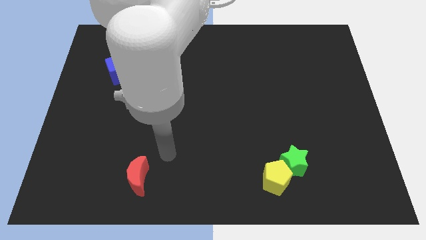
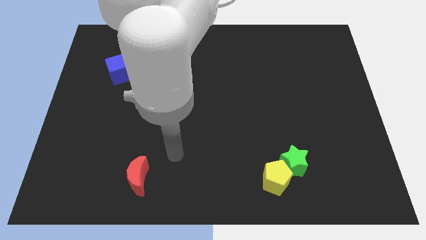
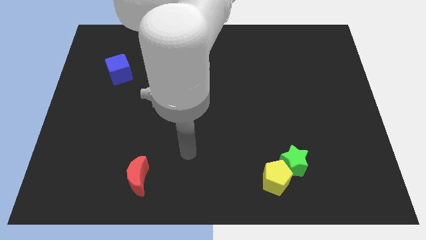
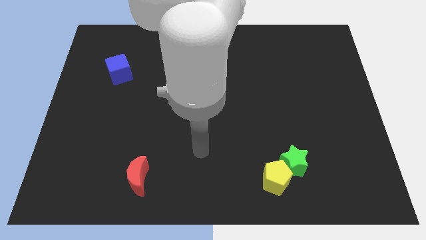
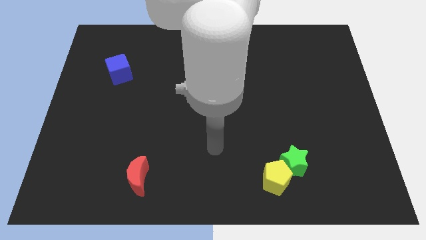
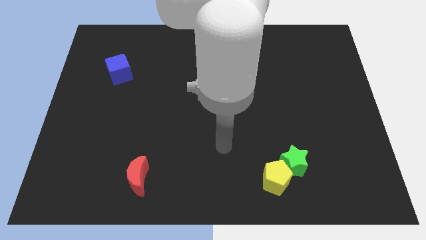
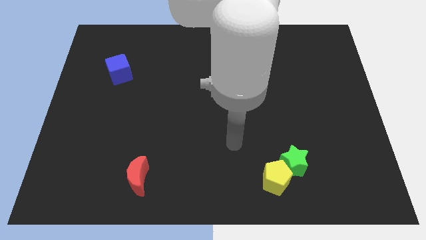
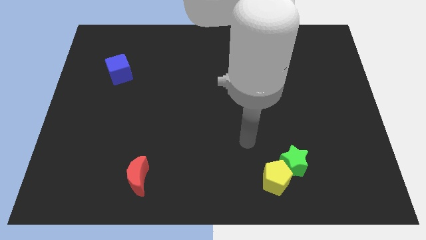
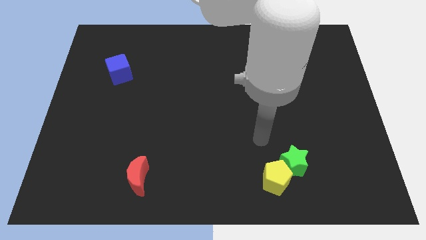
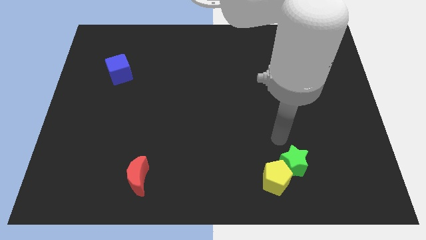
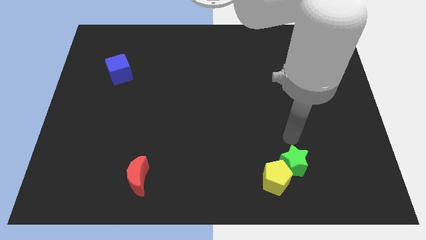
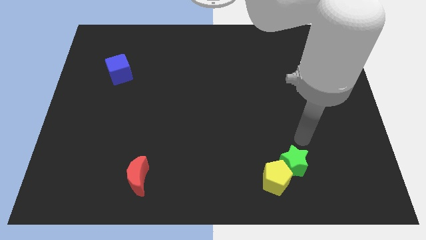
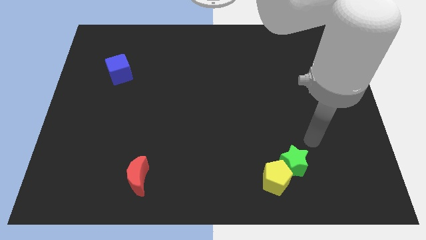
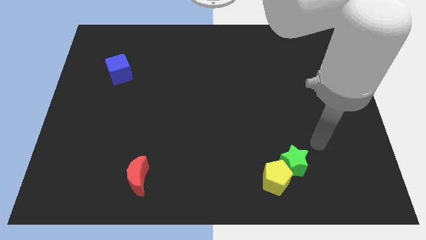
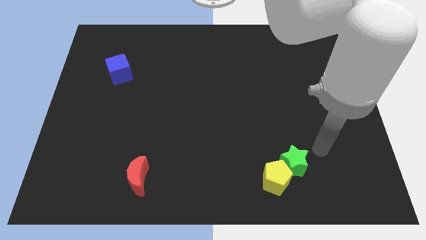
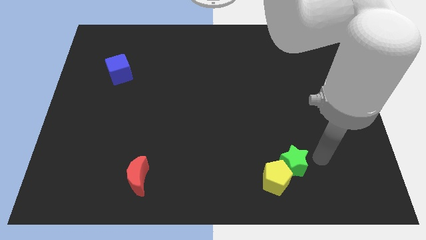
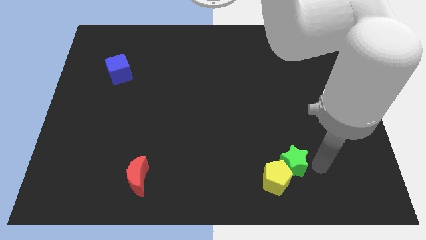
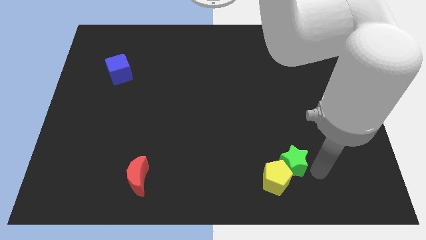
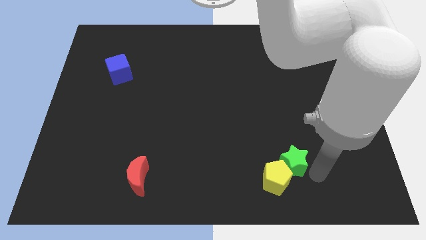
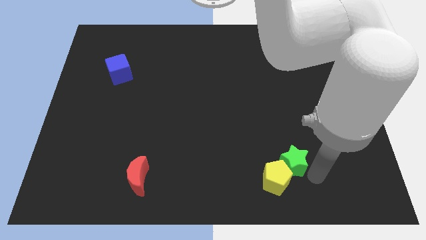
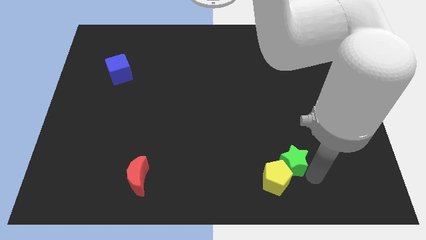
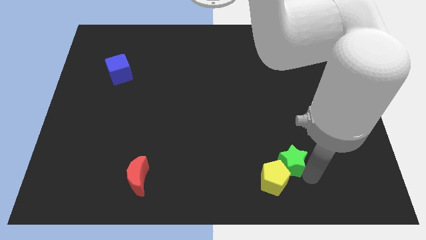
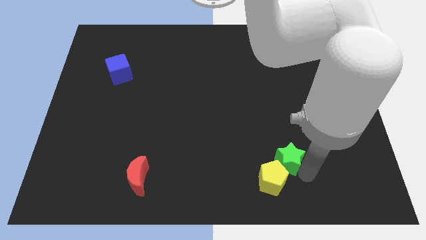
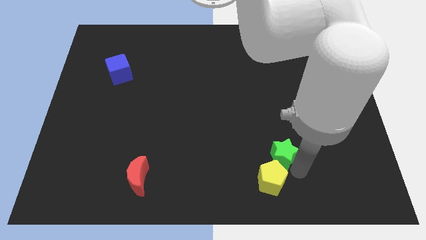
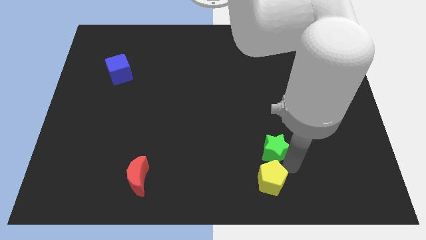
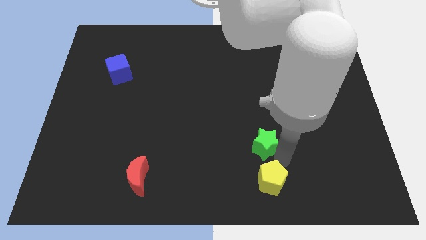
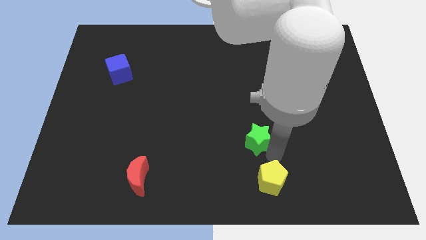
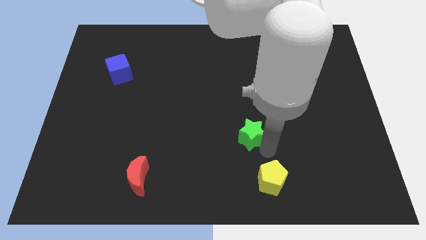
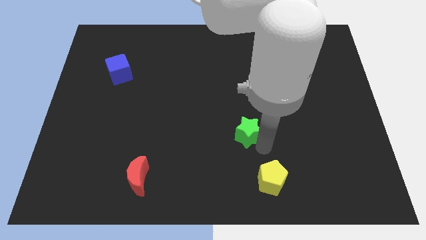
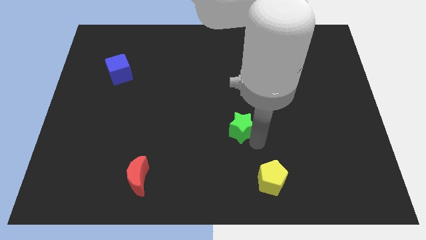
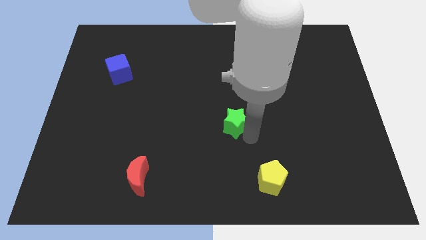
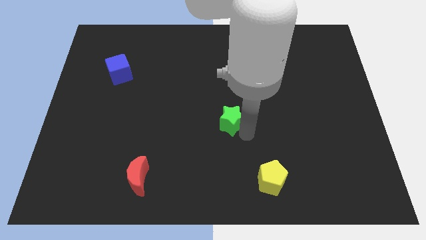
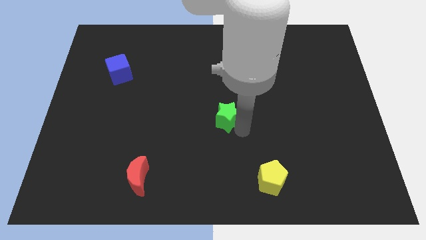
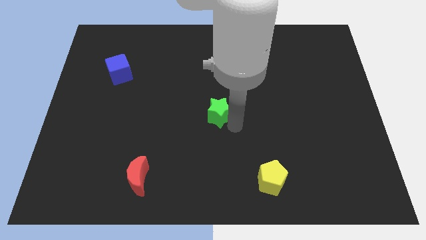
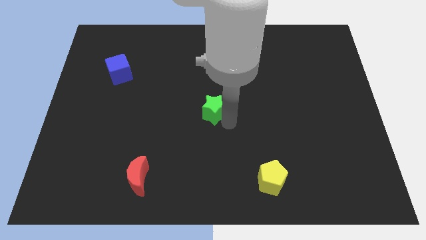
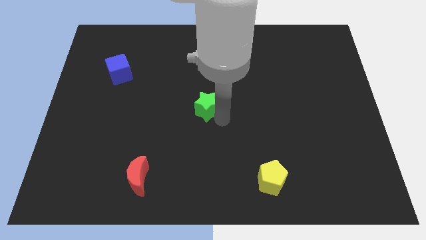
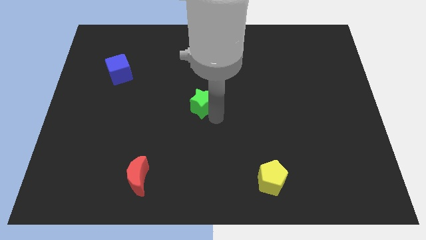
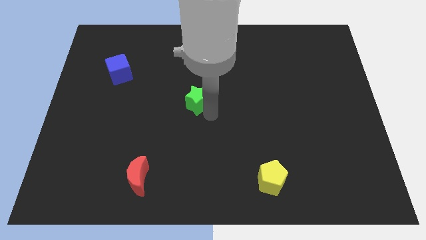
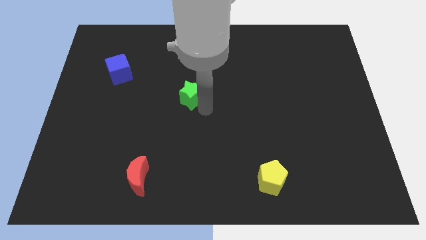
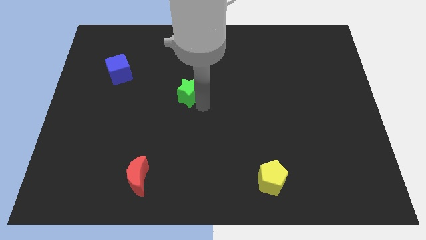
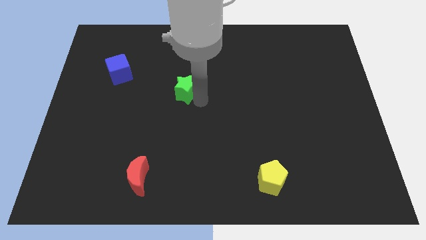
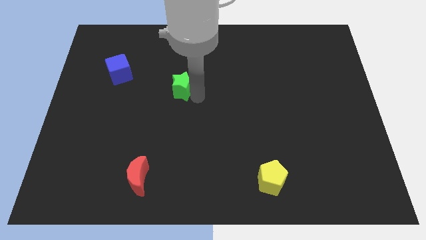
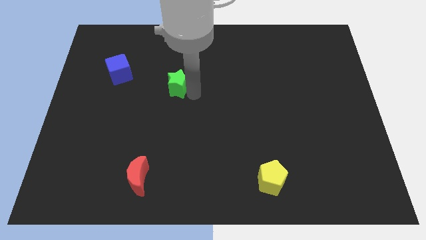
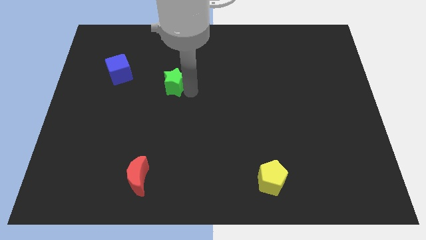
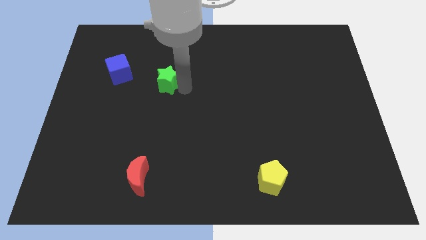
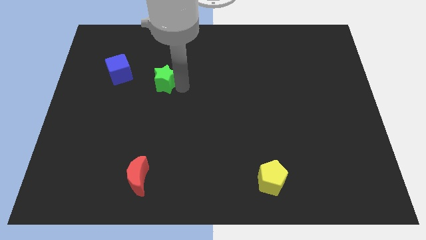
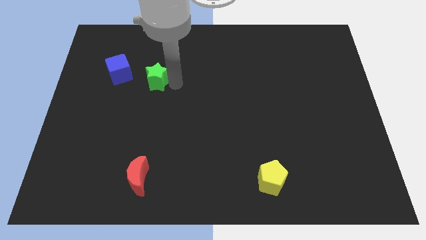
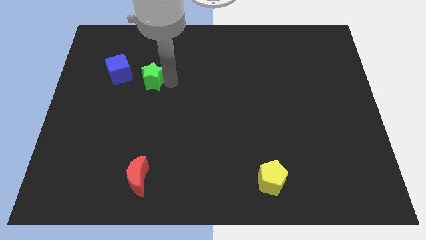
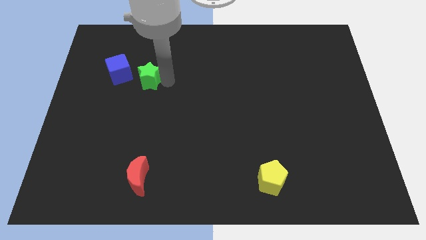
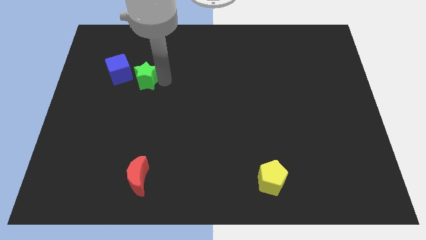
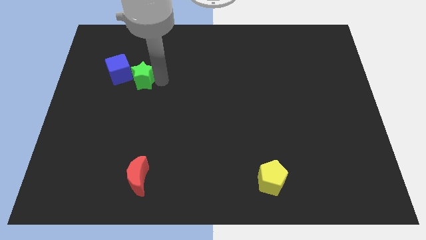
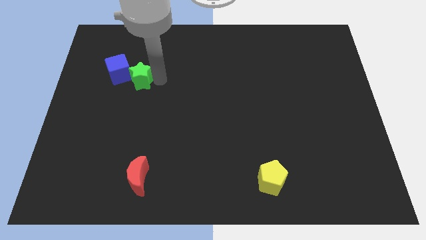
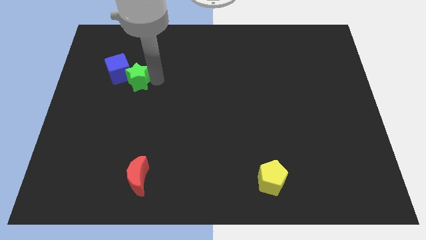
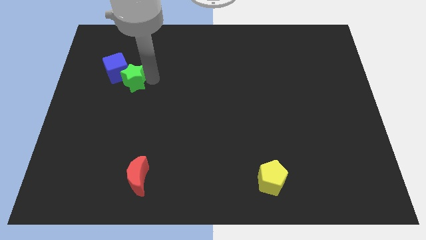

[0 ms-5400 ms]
put the star close to the blue cube

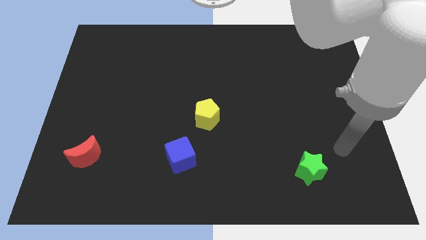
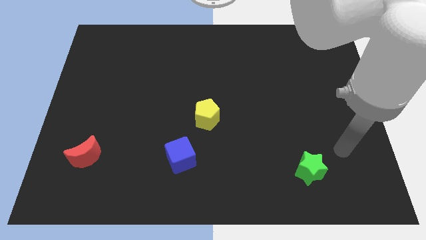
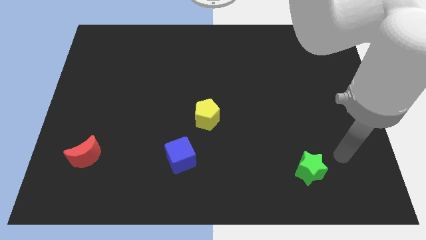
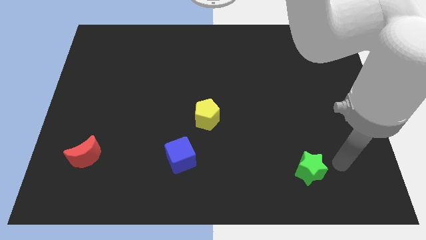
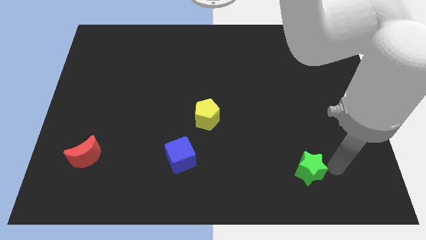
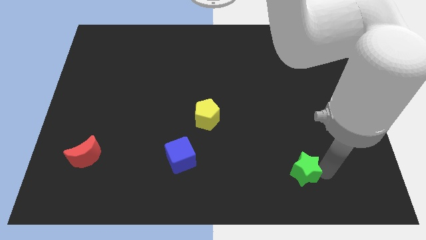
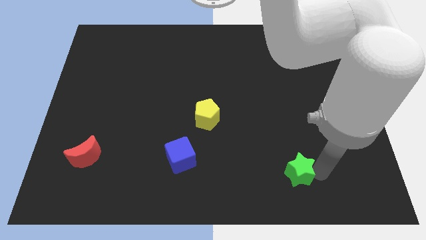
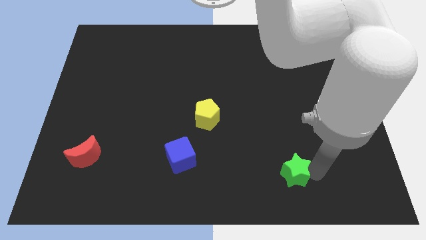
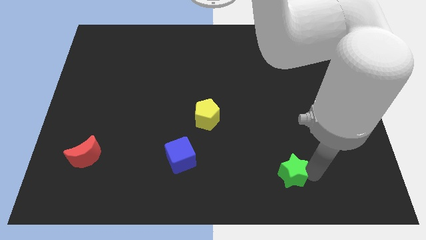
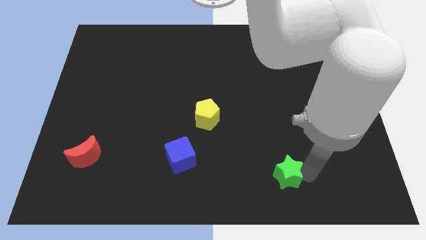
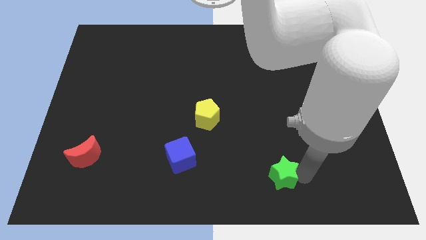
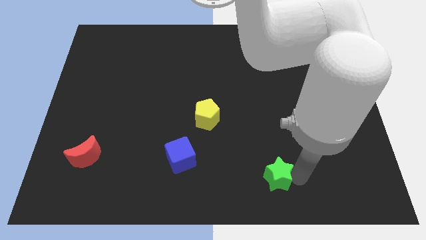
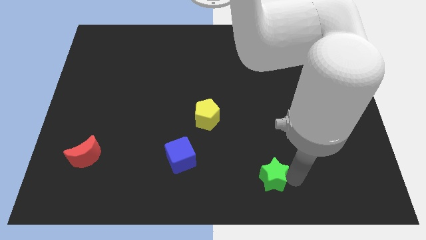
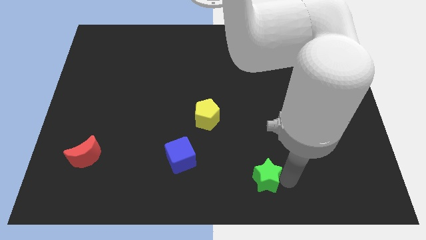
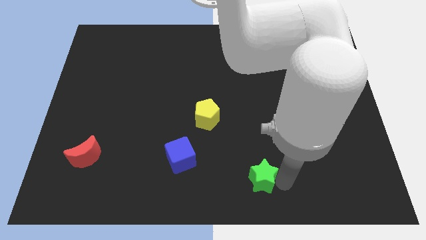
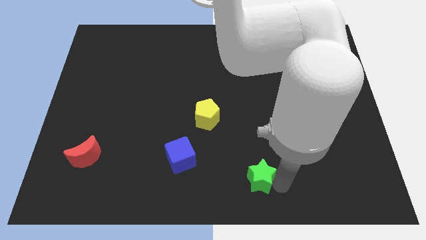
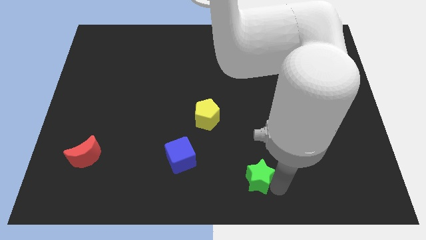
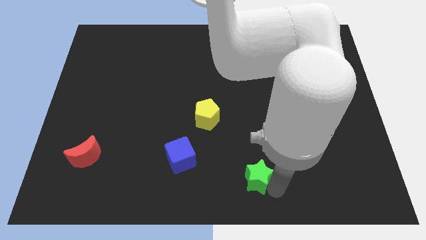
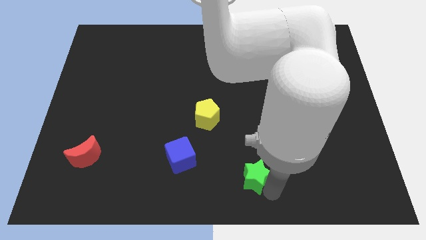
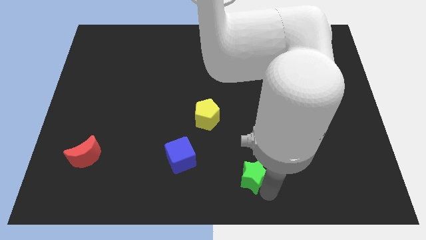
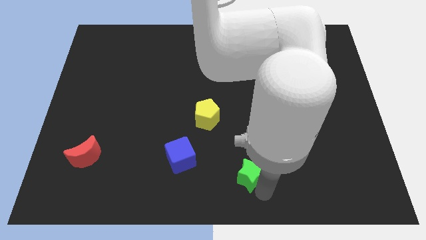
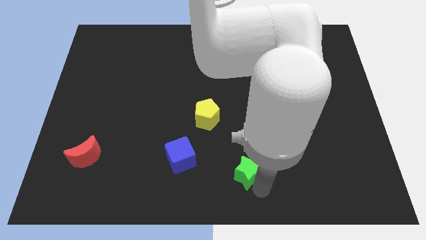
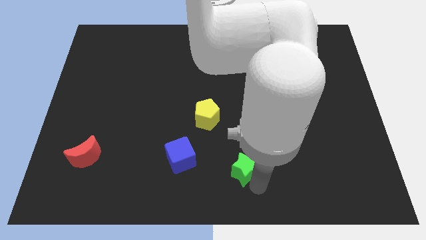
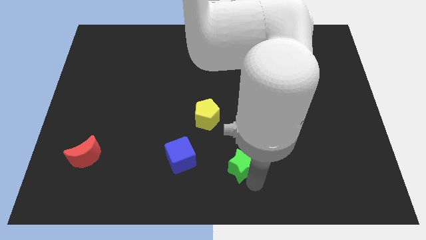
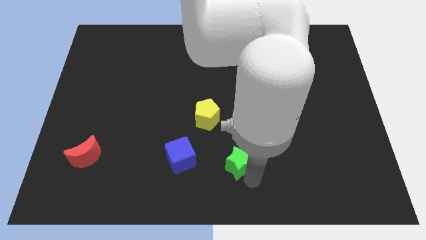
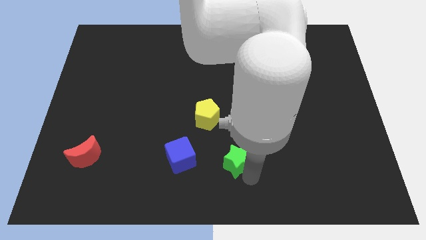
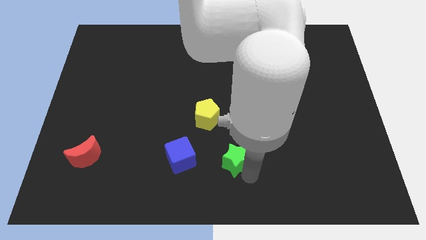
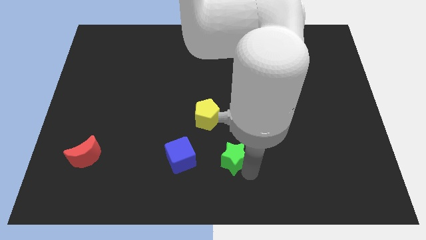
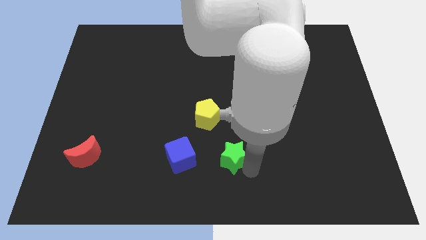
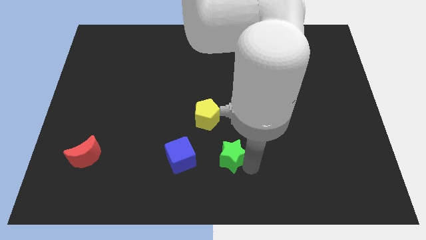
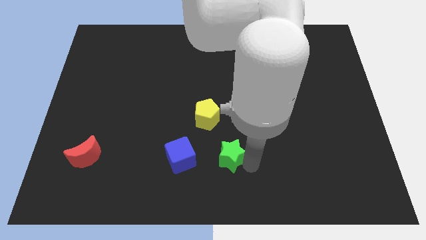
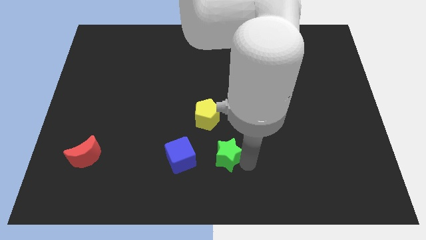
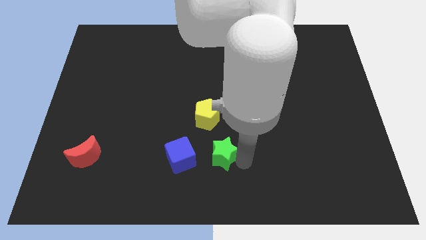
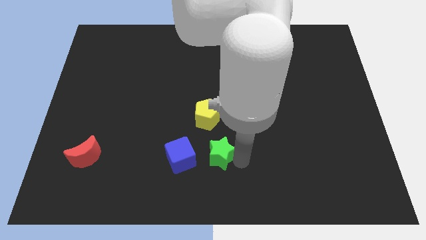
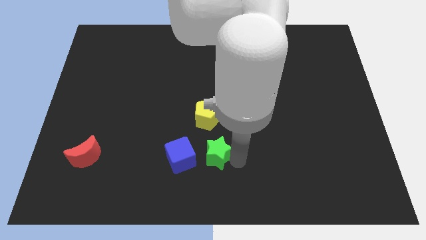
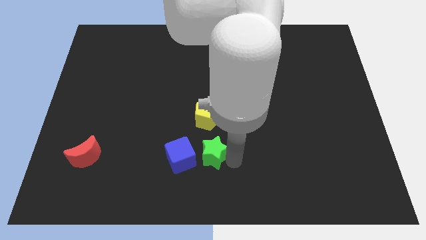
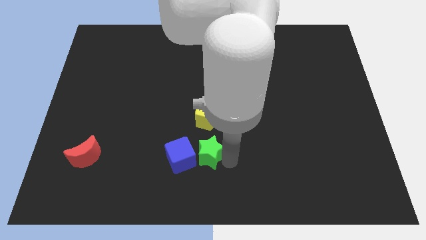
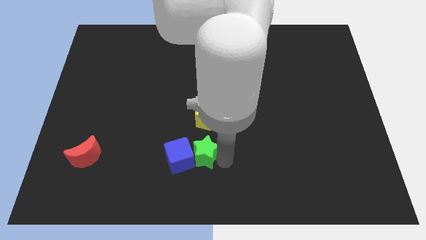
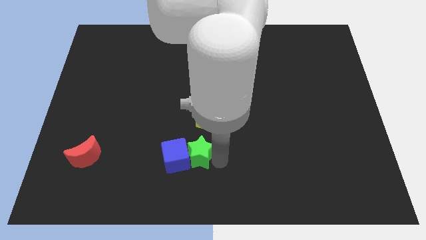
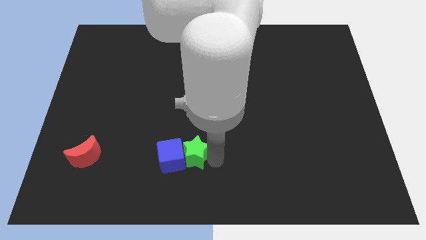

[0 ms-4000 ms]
push the green star to the blue block
